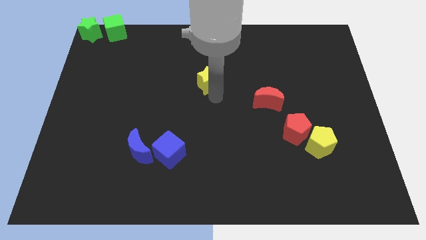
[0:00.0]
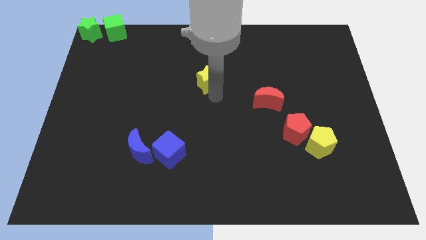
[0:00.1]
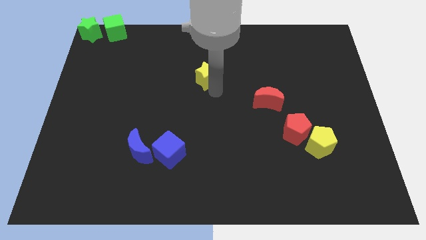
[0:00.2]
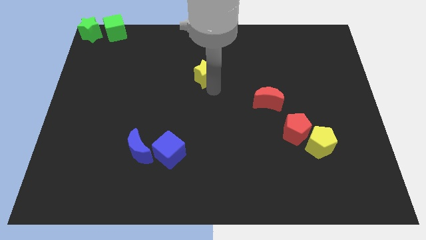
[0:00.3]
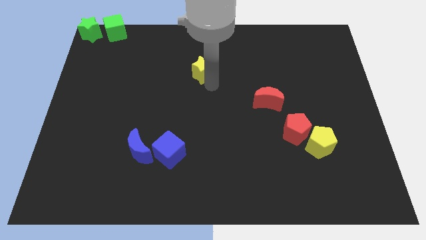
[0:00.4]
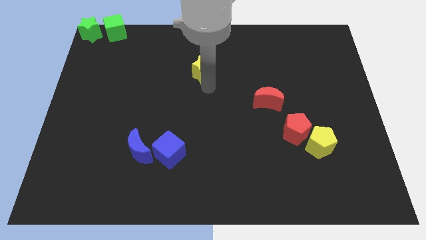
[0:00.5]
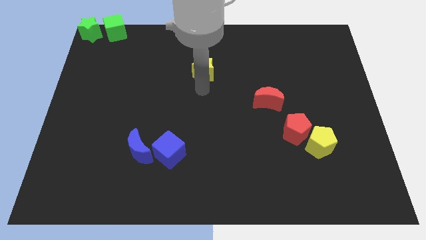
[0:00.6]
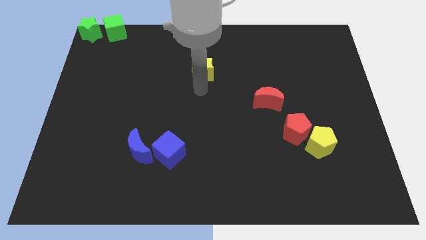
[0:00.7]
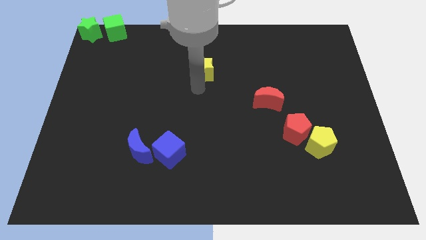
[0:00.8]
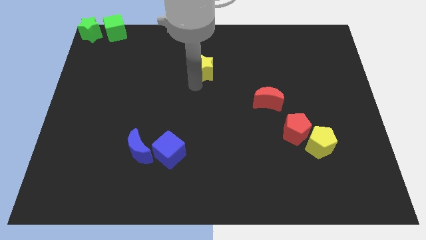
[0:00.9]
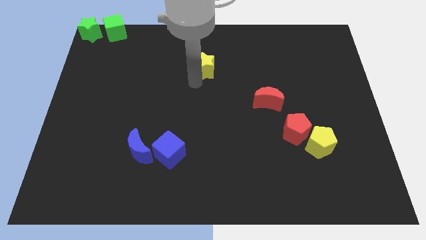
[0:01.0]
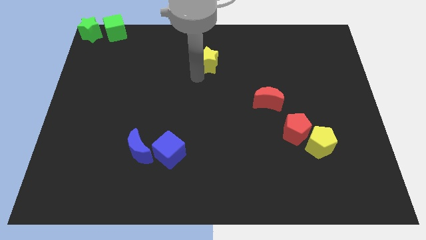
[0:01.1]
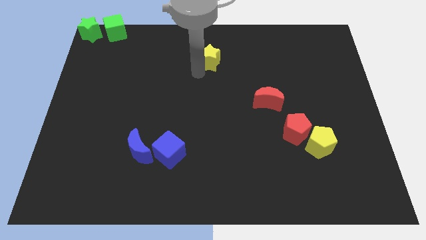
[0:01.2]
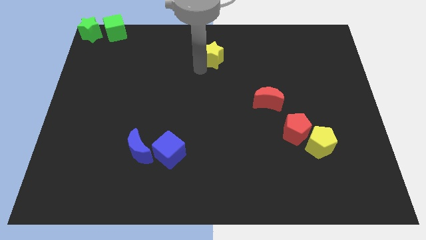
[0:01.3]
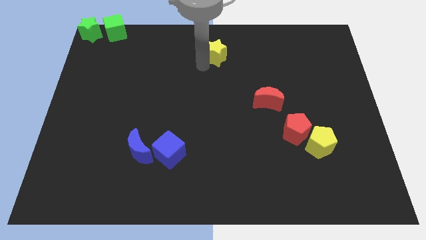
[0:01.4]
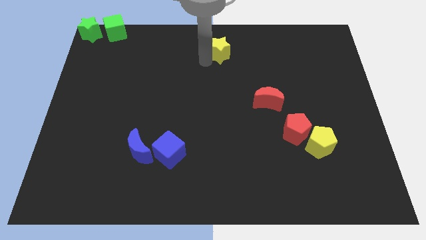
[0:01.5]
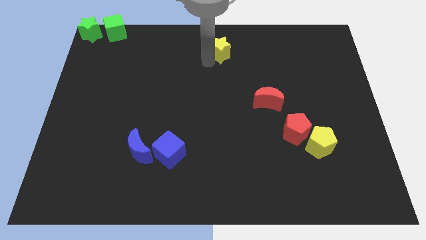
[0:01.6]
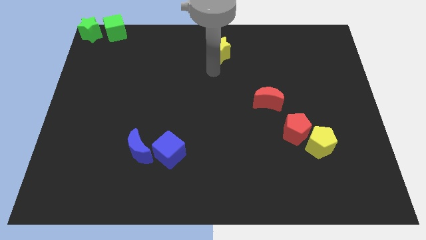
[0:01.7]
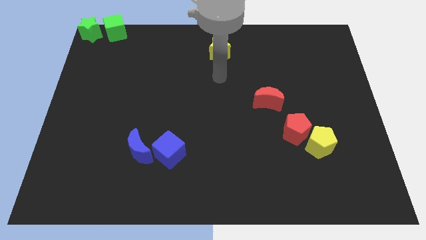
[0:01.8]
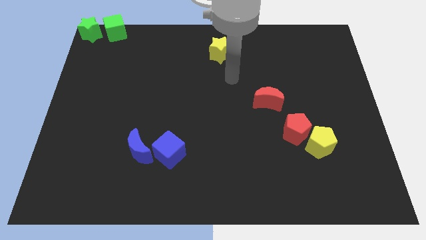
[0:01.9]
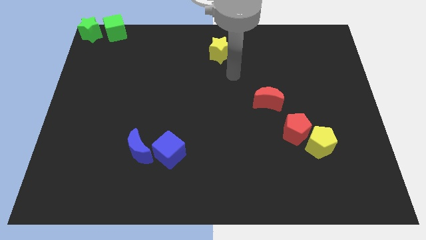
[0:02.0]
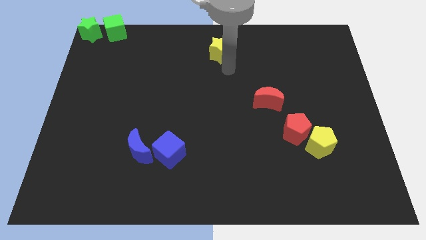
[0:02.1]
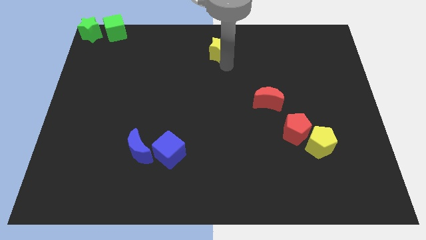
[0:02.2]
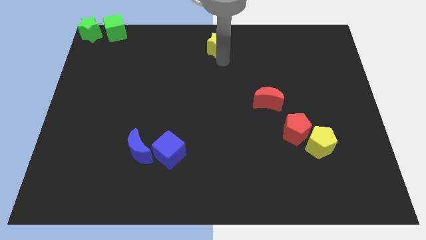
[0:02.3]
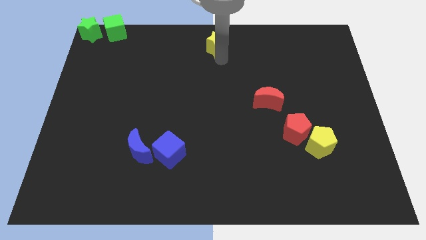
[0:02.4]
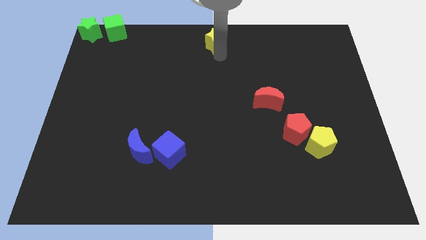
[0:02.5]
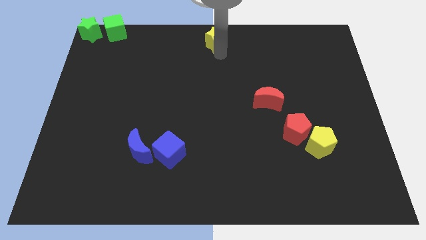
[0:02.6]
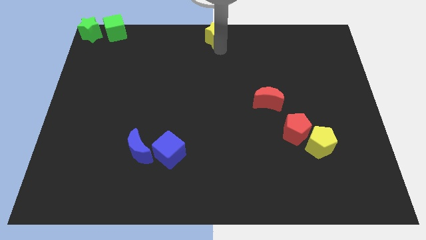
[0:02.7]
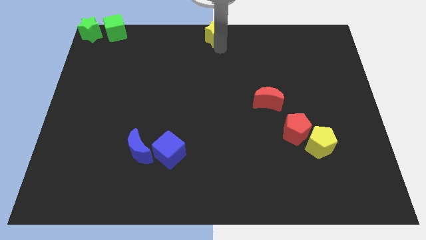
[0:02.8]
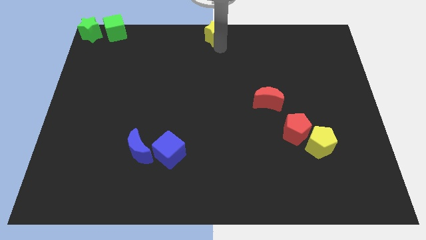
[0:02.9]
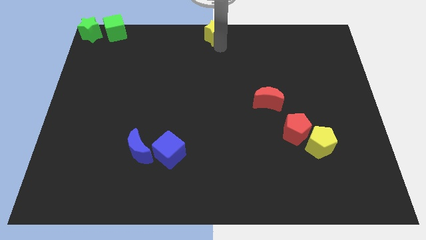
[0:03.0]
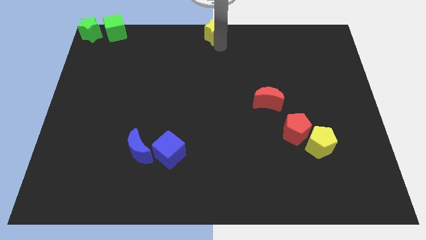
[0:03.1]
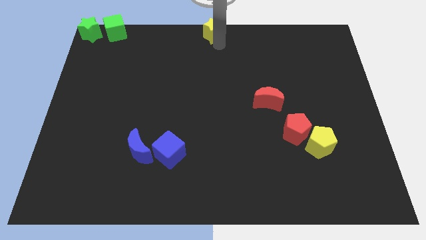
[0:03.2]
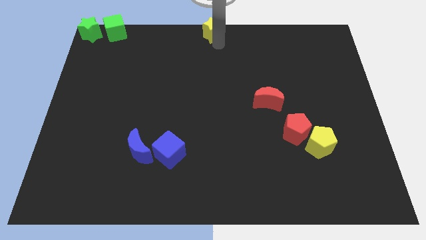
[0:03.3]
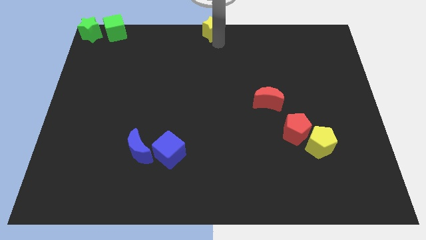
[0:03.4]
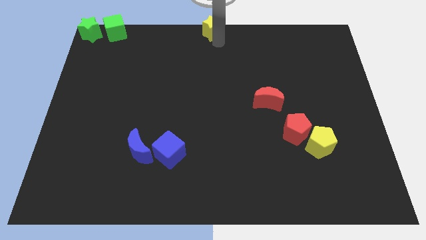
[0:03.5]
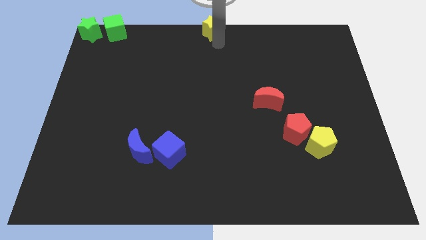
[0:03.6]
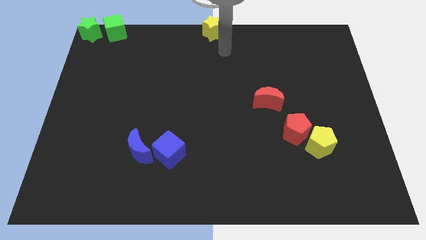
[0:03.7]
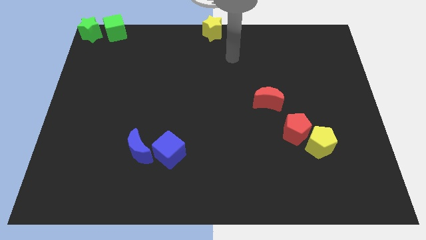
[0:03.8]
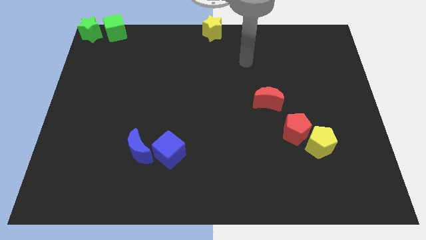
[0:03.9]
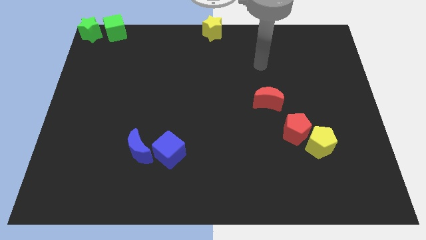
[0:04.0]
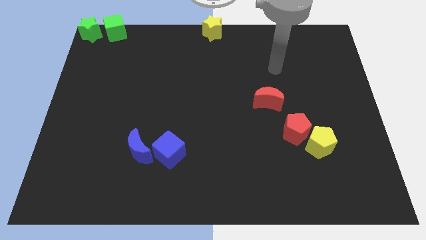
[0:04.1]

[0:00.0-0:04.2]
place the yellow star right to the green cube

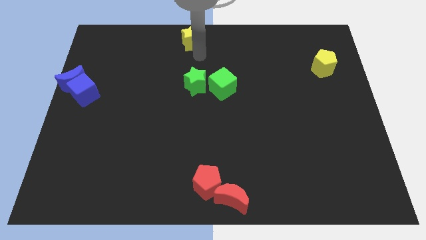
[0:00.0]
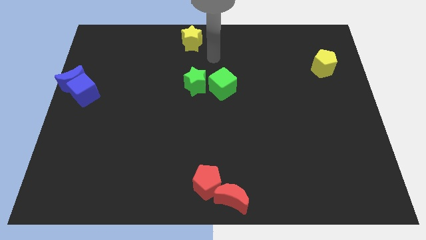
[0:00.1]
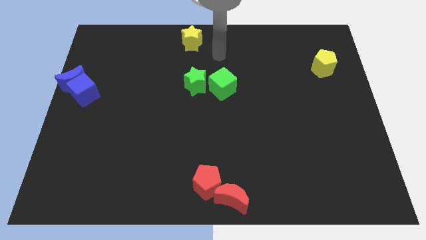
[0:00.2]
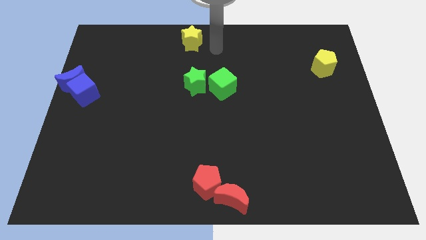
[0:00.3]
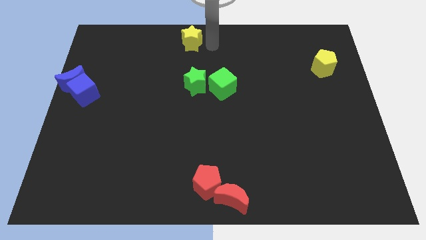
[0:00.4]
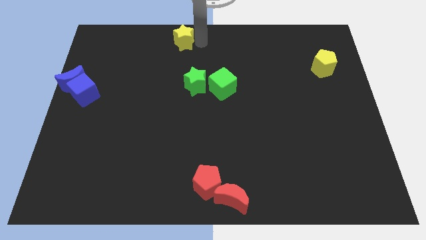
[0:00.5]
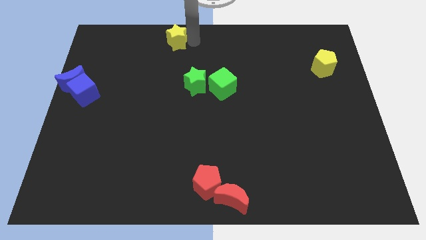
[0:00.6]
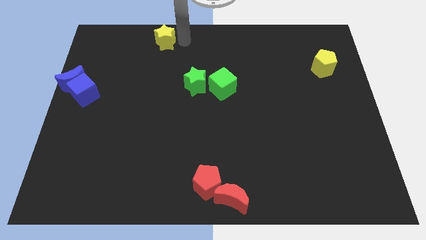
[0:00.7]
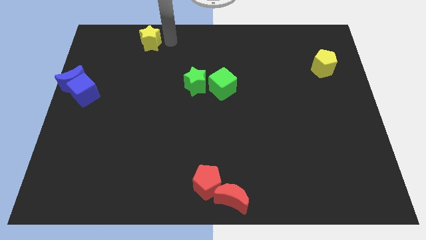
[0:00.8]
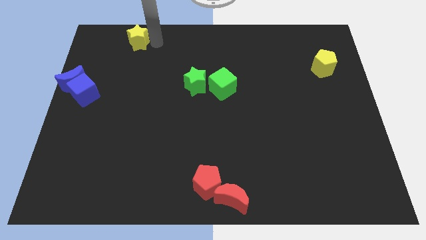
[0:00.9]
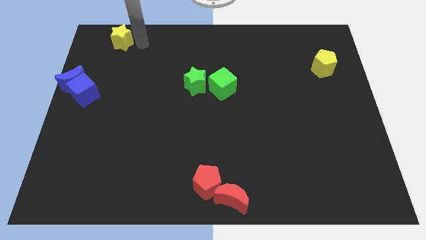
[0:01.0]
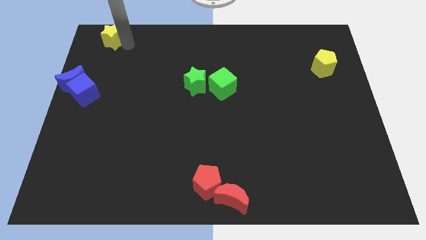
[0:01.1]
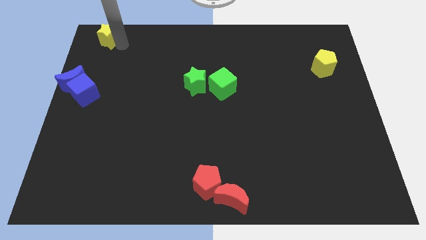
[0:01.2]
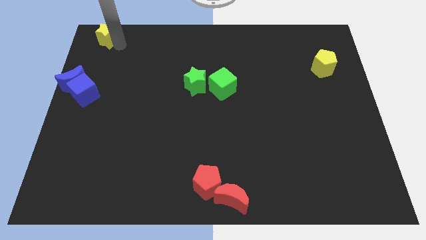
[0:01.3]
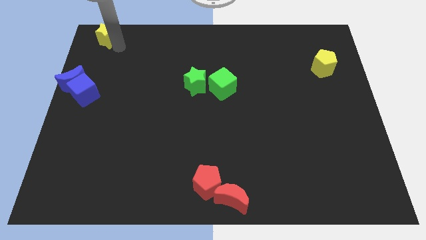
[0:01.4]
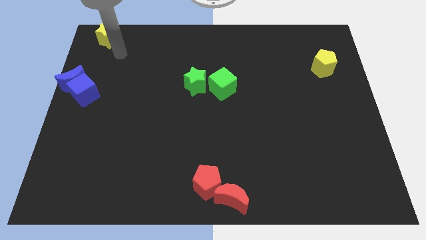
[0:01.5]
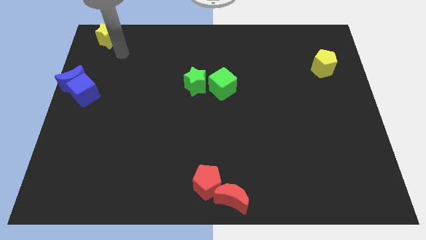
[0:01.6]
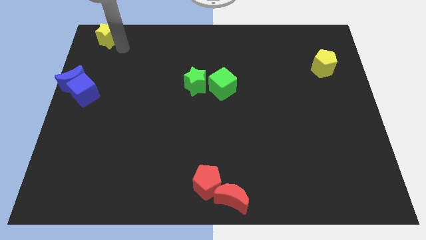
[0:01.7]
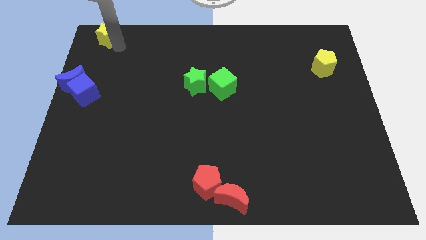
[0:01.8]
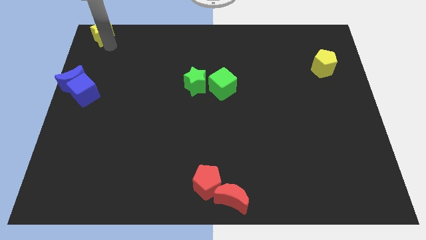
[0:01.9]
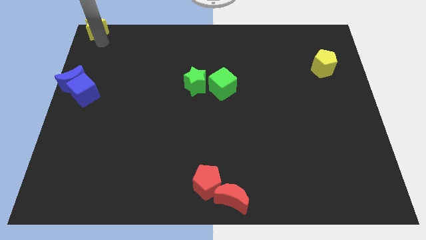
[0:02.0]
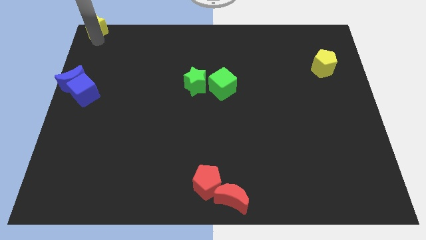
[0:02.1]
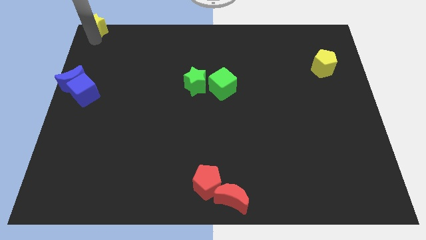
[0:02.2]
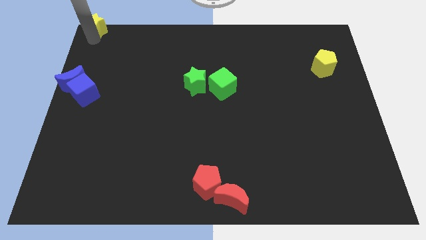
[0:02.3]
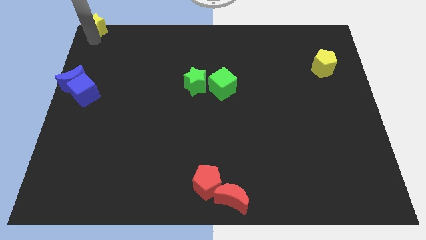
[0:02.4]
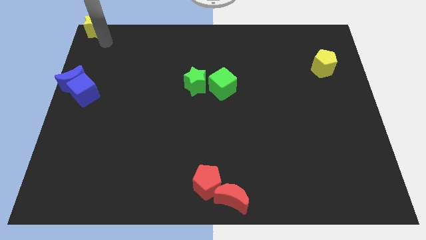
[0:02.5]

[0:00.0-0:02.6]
slide yellow pentagon to the top left corner of the board

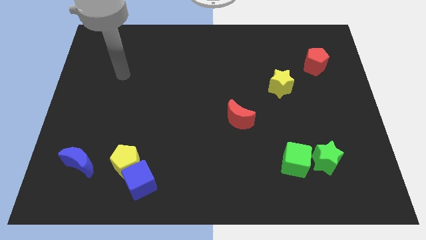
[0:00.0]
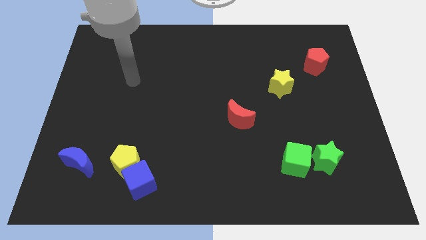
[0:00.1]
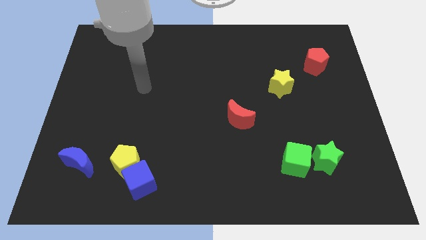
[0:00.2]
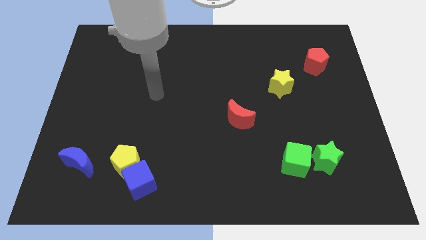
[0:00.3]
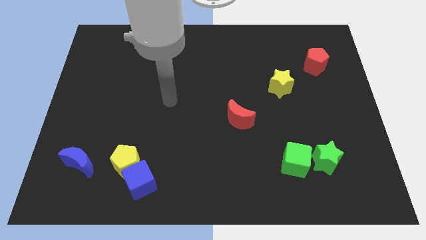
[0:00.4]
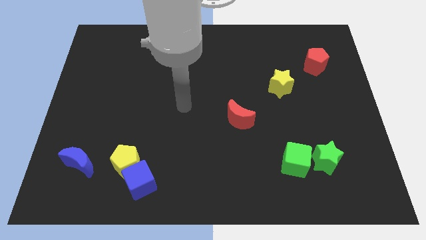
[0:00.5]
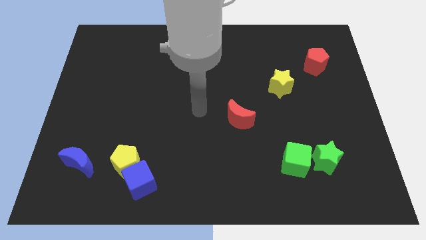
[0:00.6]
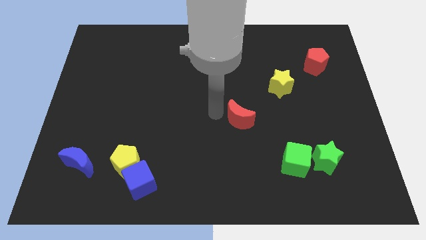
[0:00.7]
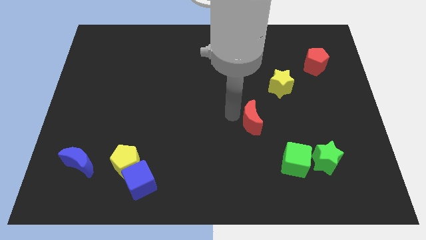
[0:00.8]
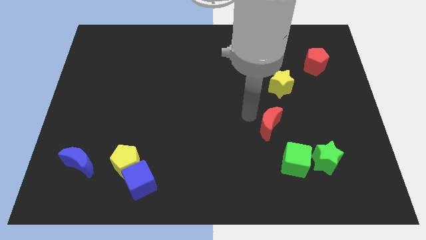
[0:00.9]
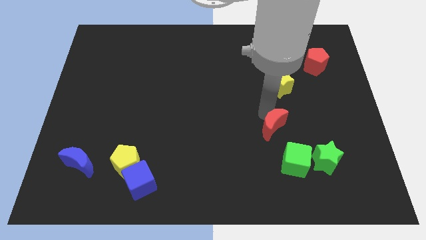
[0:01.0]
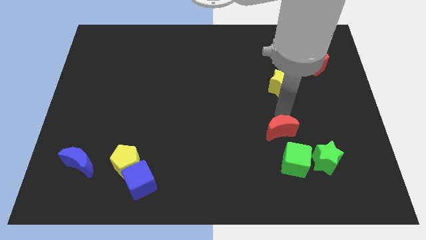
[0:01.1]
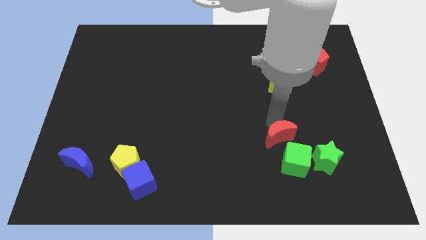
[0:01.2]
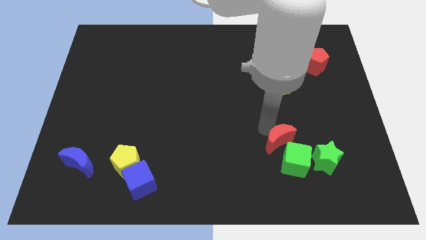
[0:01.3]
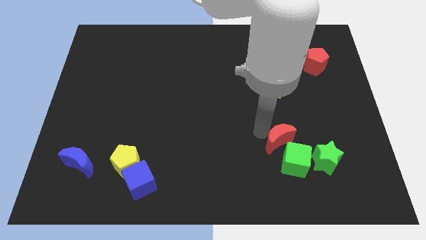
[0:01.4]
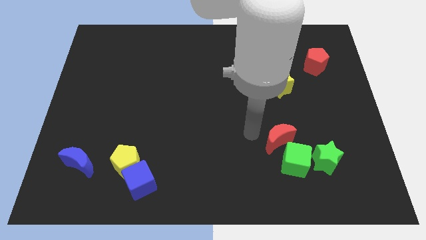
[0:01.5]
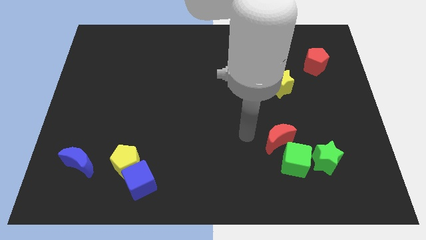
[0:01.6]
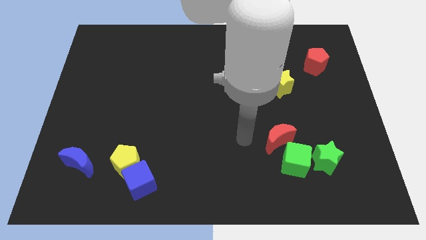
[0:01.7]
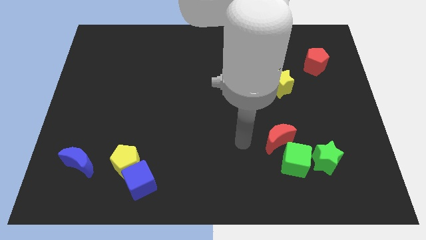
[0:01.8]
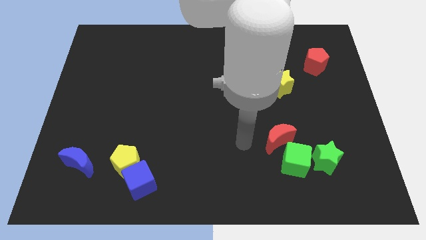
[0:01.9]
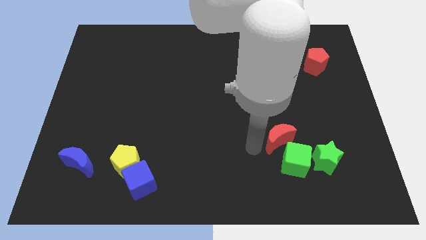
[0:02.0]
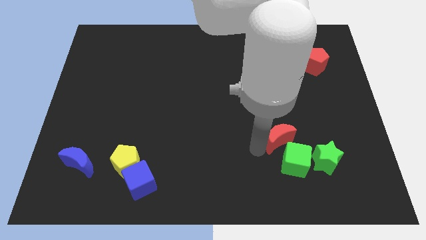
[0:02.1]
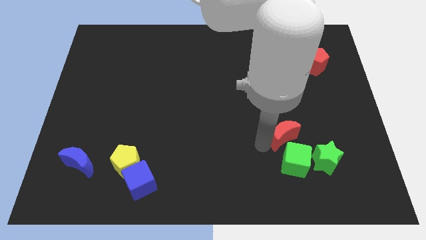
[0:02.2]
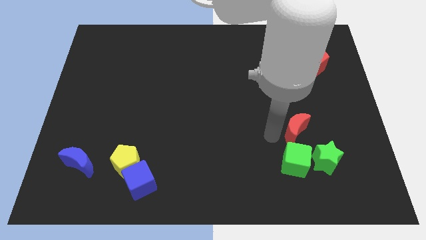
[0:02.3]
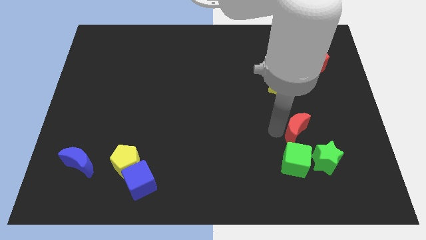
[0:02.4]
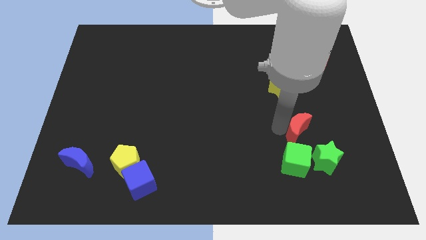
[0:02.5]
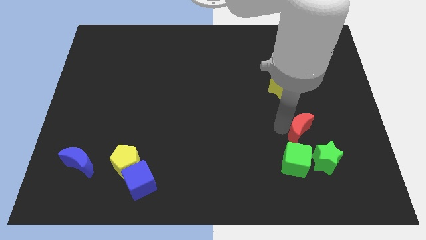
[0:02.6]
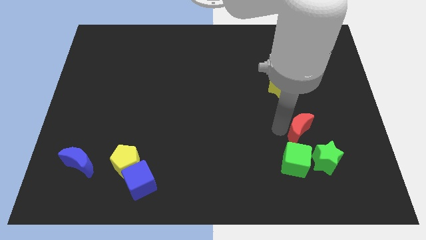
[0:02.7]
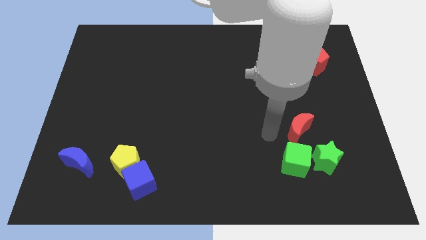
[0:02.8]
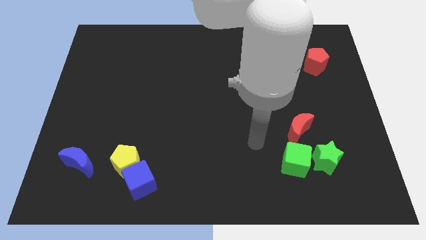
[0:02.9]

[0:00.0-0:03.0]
push red crescent above green cube
